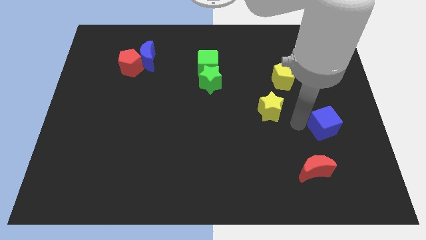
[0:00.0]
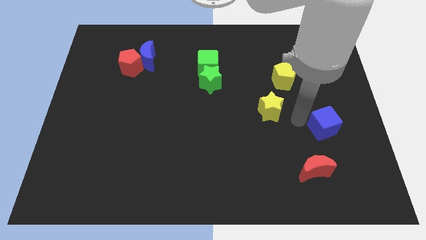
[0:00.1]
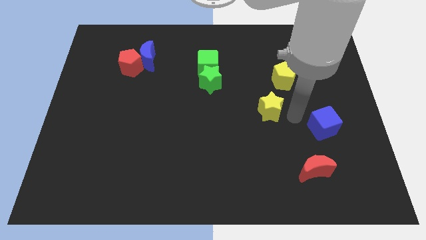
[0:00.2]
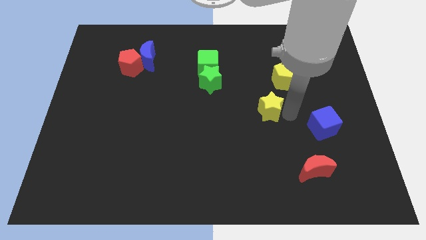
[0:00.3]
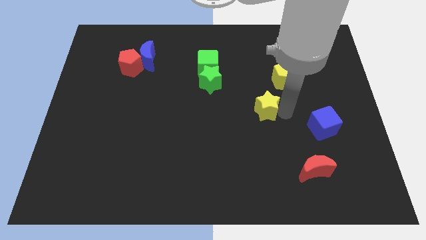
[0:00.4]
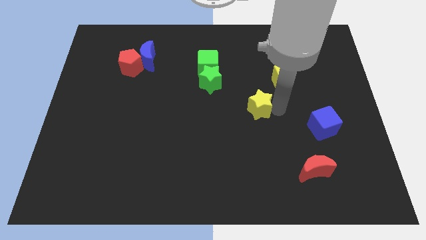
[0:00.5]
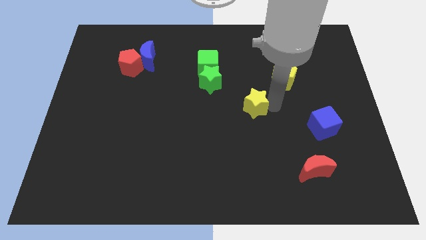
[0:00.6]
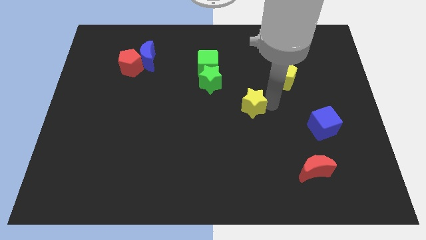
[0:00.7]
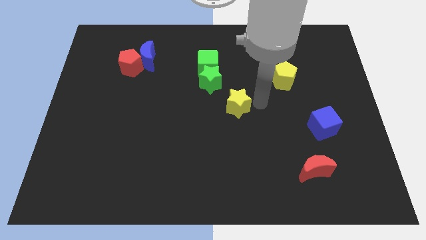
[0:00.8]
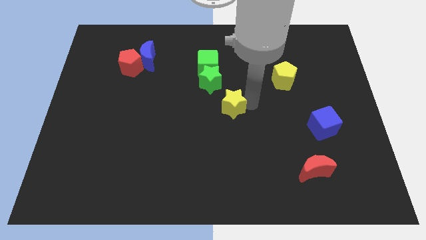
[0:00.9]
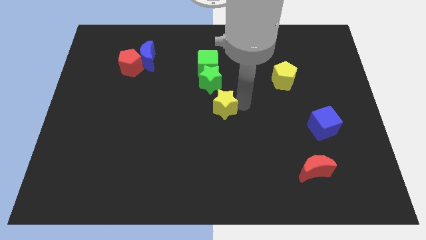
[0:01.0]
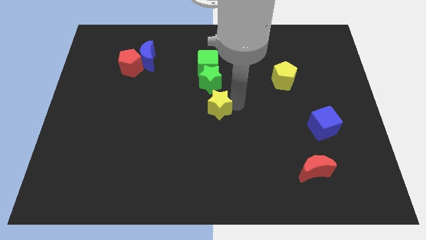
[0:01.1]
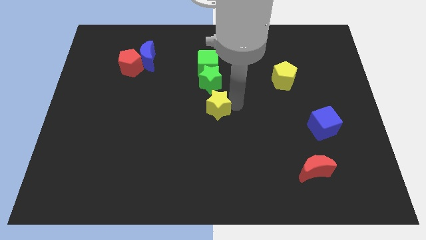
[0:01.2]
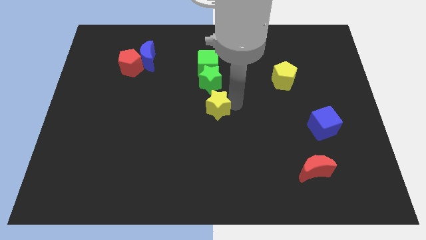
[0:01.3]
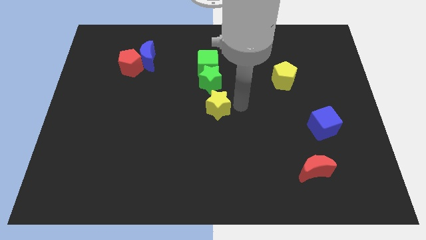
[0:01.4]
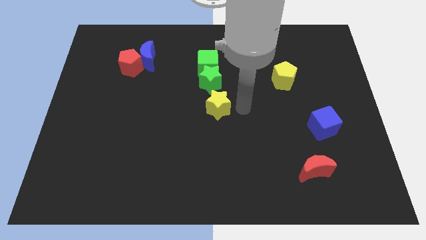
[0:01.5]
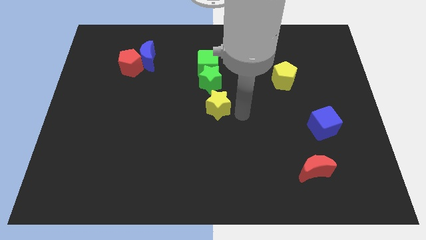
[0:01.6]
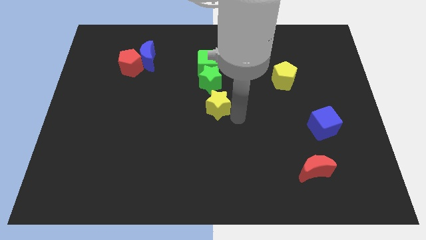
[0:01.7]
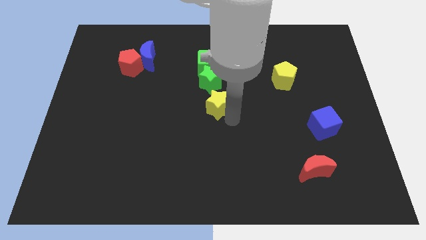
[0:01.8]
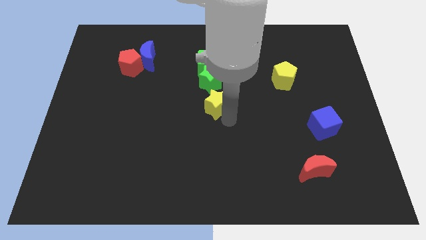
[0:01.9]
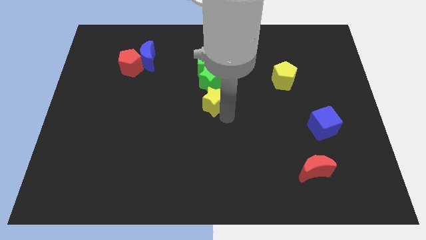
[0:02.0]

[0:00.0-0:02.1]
put the yellow star below the green star

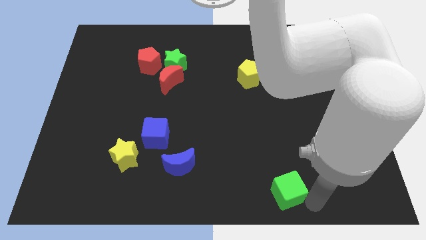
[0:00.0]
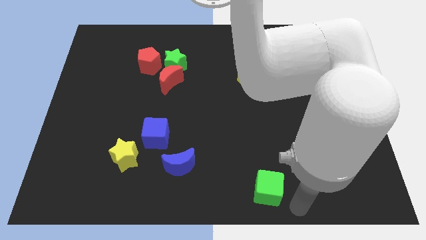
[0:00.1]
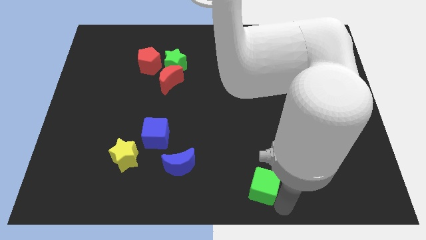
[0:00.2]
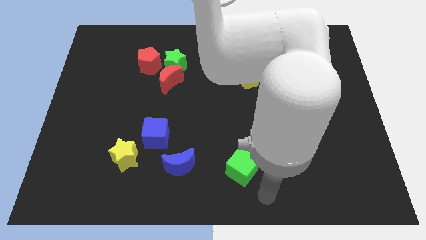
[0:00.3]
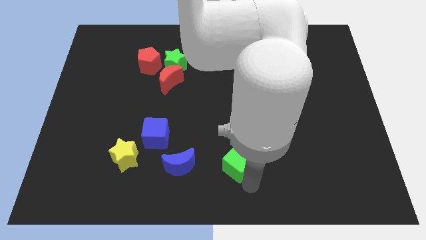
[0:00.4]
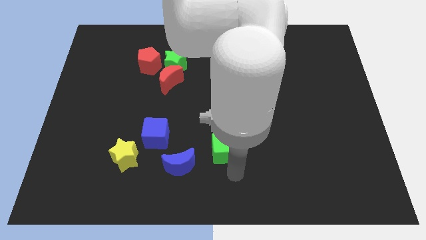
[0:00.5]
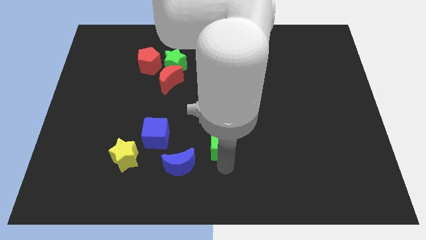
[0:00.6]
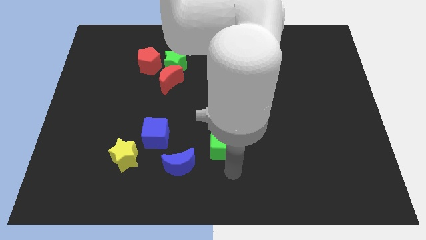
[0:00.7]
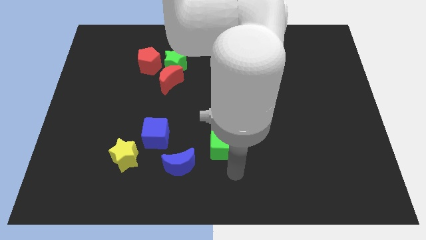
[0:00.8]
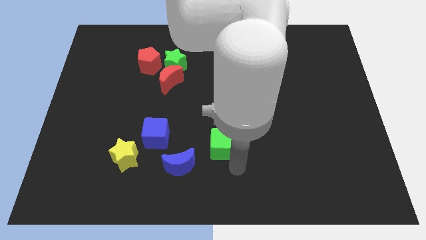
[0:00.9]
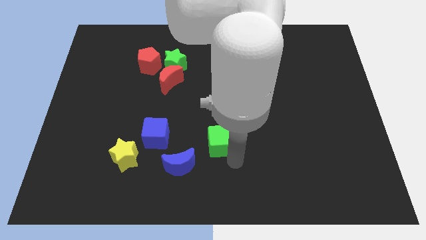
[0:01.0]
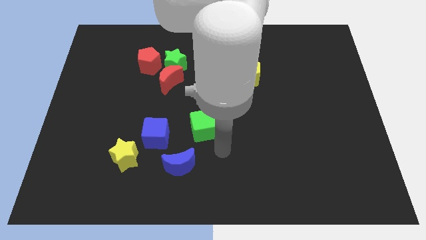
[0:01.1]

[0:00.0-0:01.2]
push the green cube to the right of the blue cube

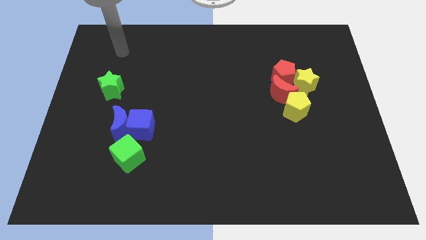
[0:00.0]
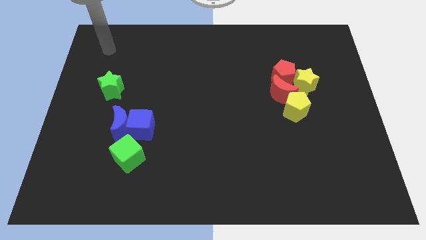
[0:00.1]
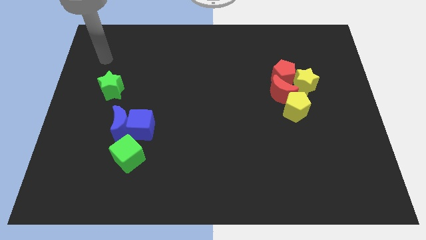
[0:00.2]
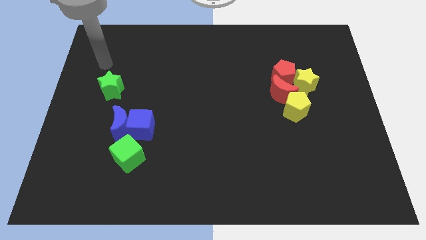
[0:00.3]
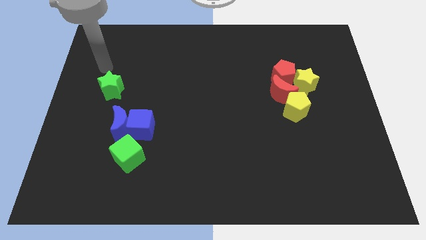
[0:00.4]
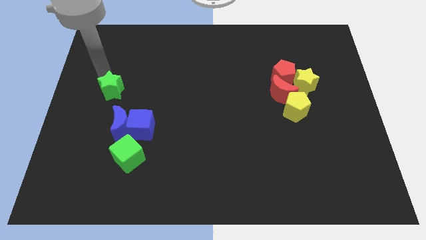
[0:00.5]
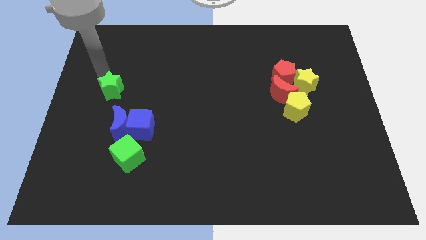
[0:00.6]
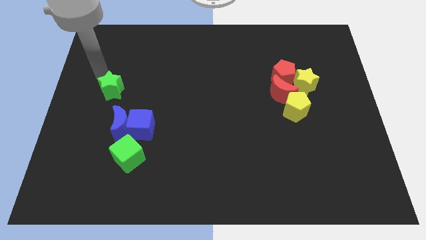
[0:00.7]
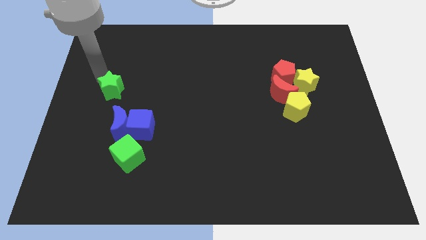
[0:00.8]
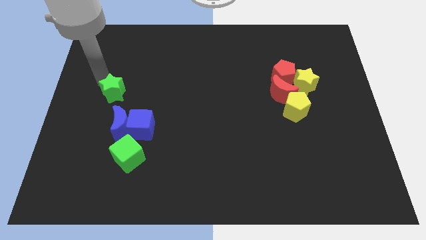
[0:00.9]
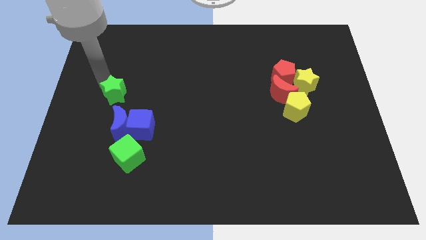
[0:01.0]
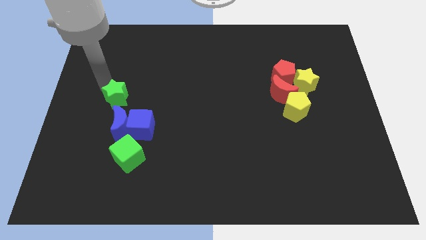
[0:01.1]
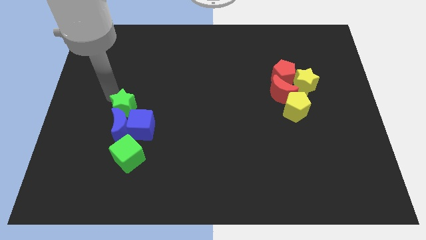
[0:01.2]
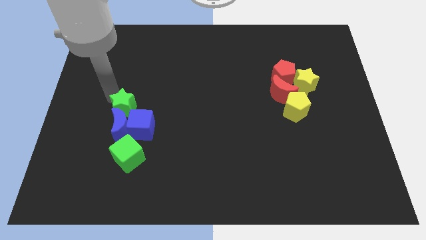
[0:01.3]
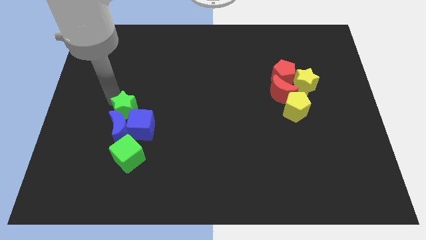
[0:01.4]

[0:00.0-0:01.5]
push the green star into the blue moon

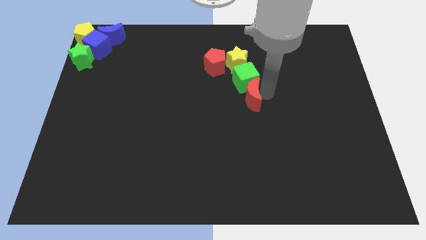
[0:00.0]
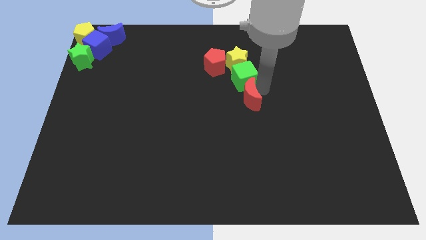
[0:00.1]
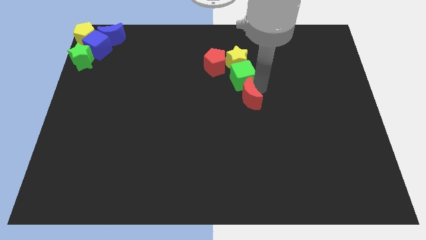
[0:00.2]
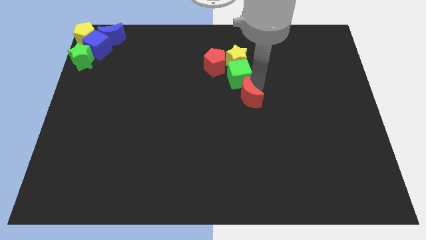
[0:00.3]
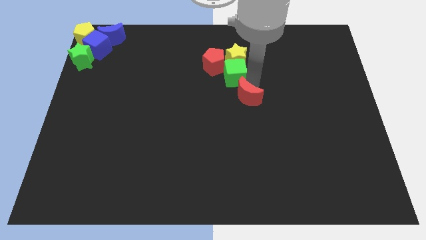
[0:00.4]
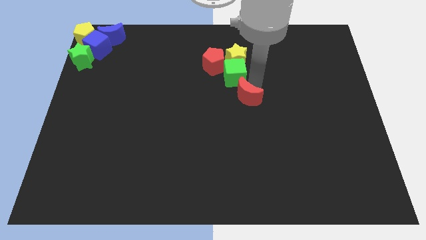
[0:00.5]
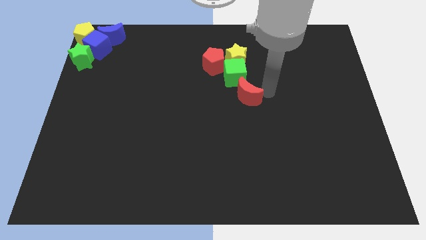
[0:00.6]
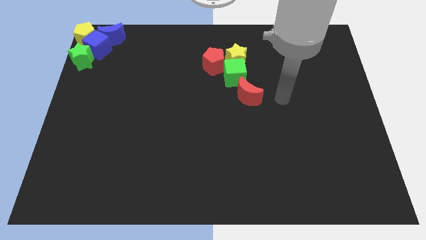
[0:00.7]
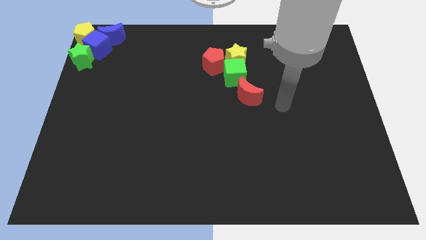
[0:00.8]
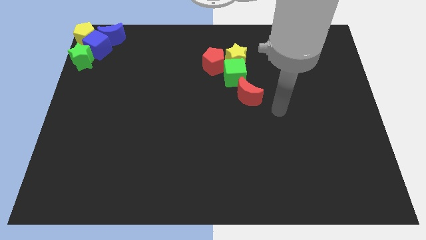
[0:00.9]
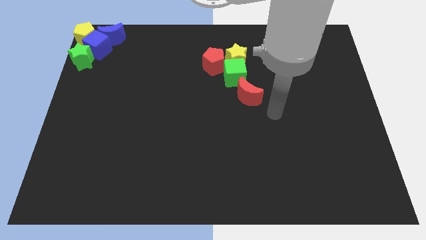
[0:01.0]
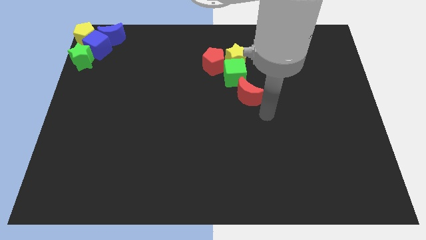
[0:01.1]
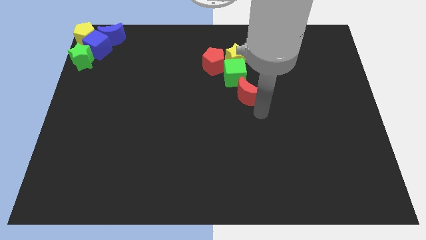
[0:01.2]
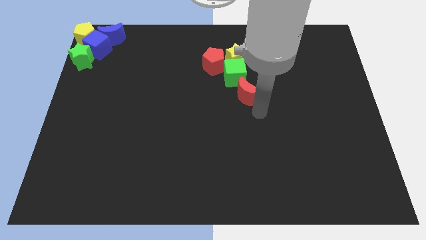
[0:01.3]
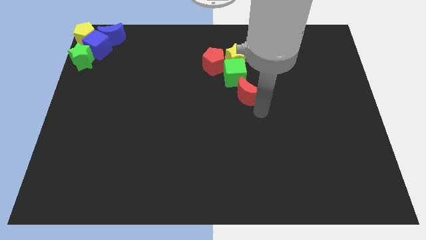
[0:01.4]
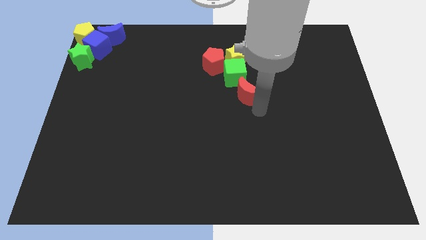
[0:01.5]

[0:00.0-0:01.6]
push the green cube below the yellow star

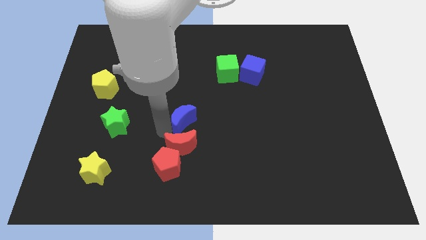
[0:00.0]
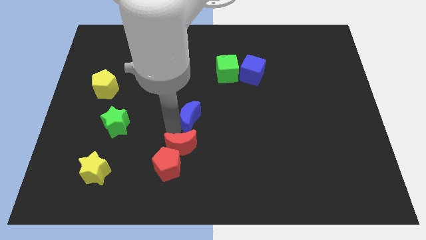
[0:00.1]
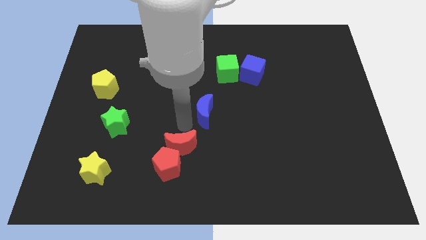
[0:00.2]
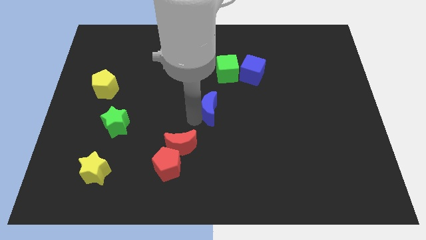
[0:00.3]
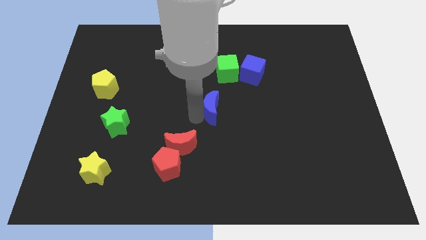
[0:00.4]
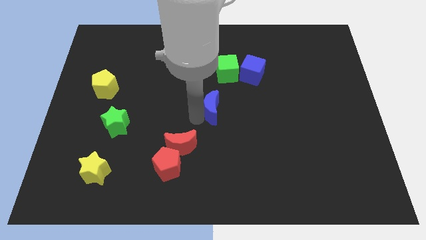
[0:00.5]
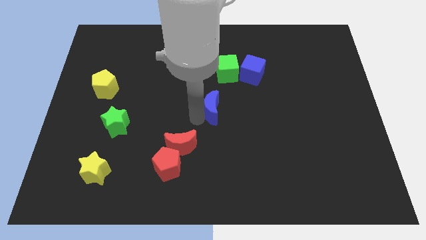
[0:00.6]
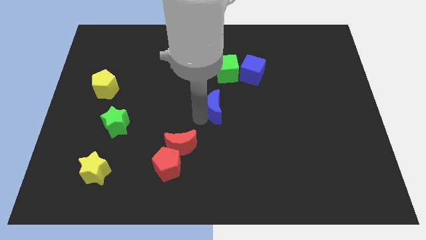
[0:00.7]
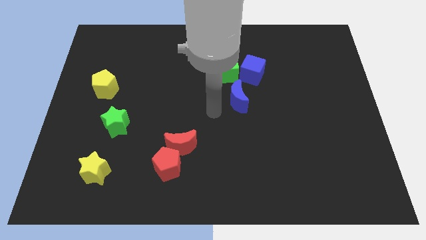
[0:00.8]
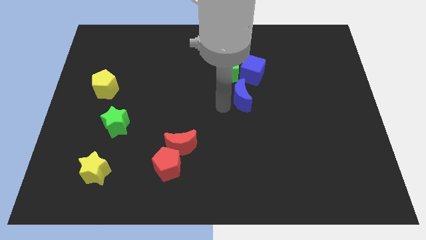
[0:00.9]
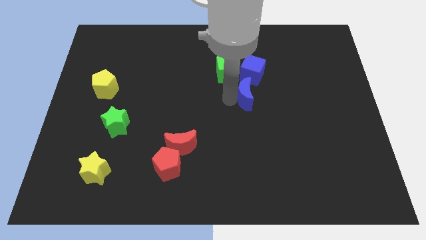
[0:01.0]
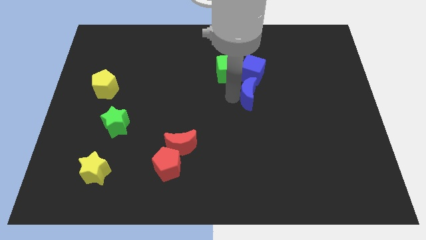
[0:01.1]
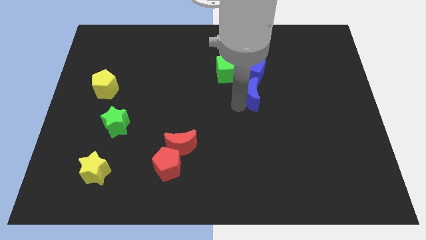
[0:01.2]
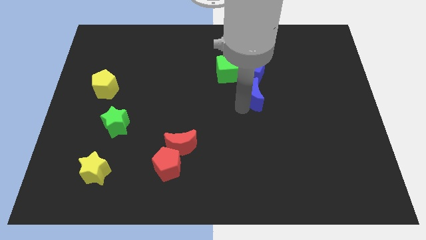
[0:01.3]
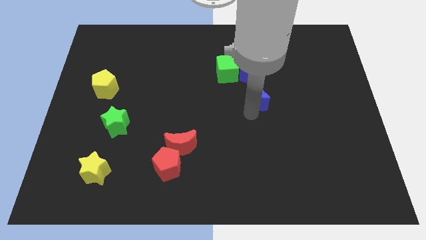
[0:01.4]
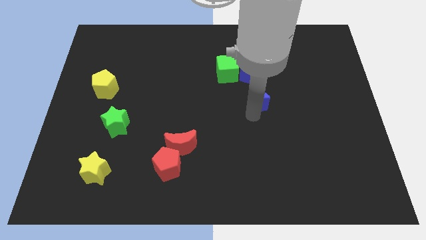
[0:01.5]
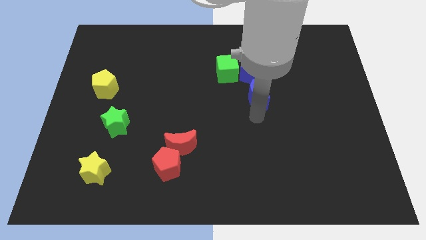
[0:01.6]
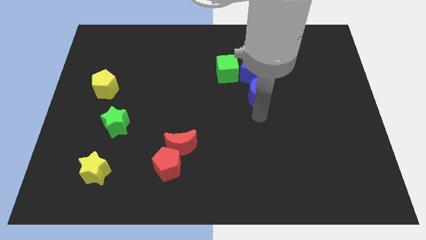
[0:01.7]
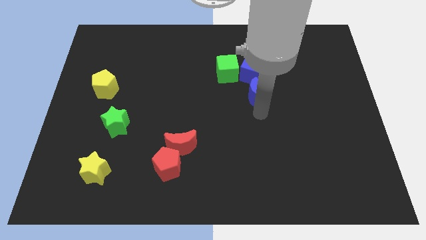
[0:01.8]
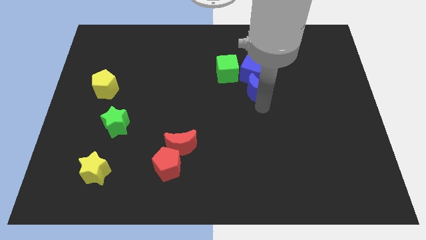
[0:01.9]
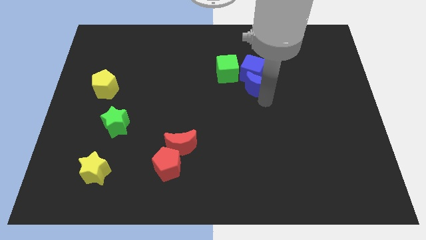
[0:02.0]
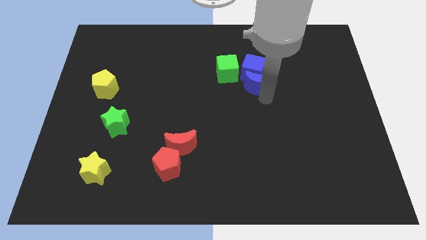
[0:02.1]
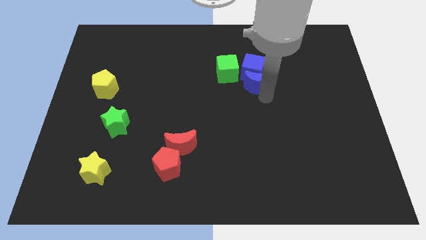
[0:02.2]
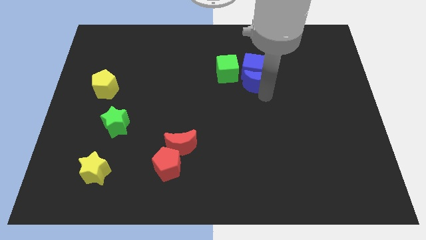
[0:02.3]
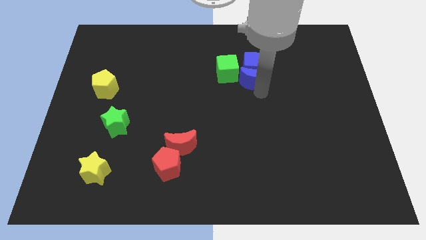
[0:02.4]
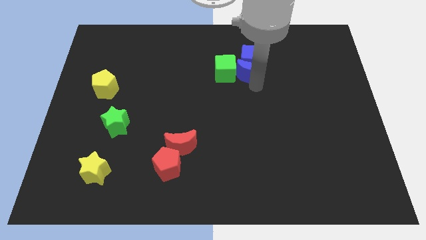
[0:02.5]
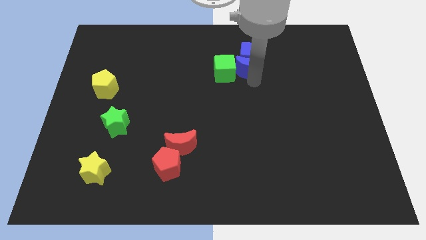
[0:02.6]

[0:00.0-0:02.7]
place the blue blocks right to the green cube
